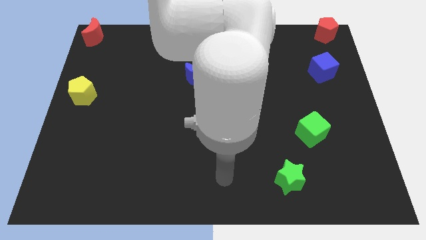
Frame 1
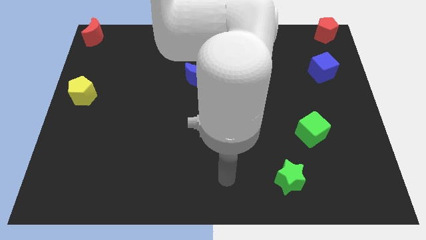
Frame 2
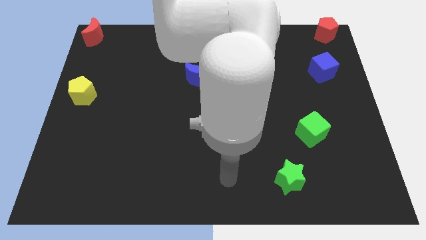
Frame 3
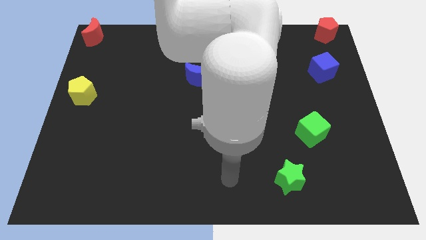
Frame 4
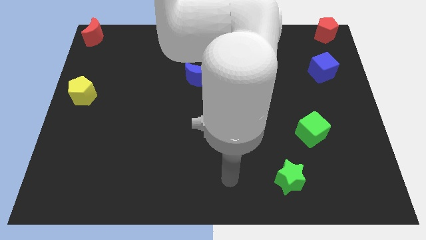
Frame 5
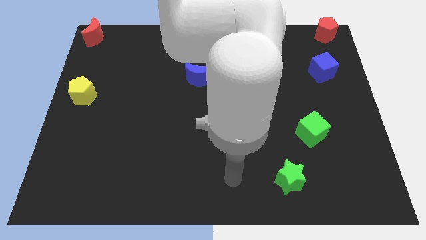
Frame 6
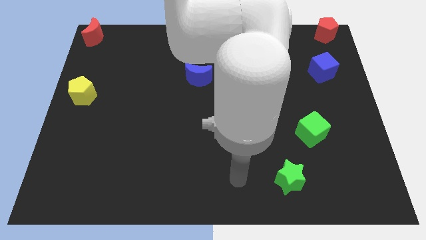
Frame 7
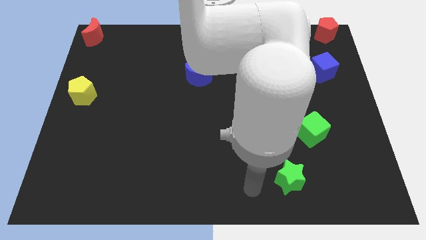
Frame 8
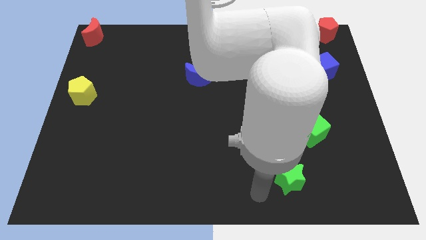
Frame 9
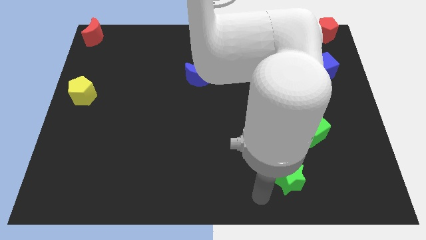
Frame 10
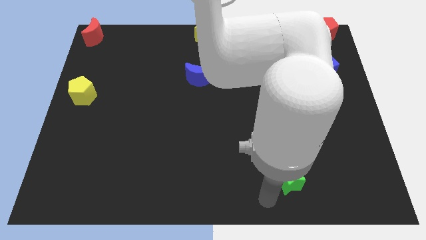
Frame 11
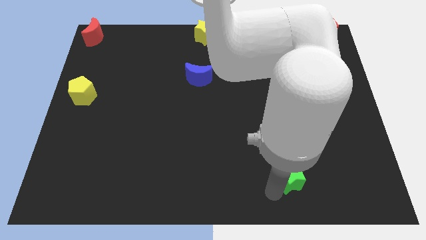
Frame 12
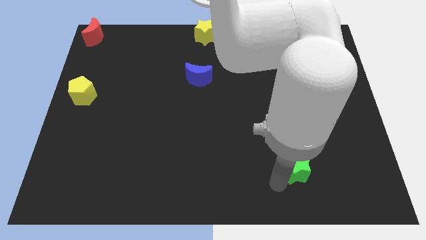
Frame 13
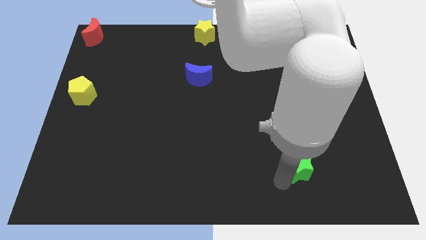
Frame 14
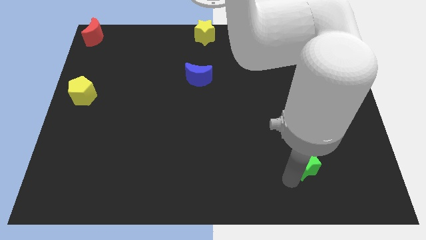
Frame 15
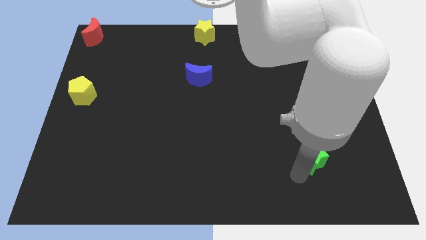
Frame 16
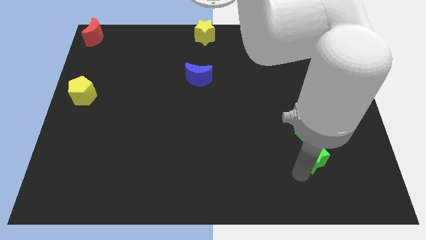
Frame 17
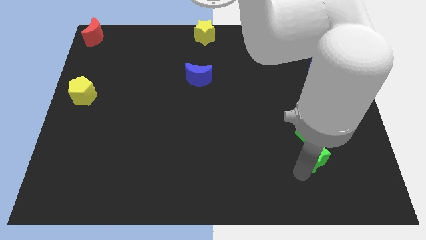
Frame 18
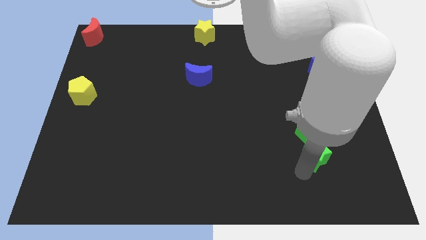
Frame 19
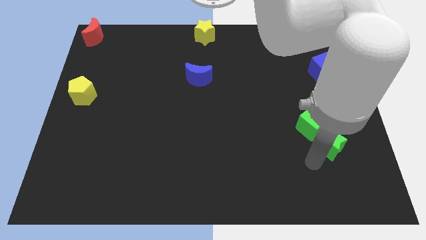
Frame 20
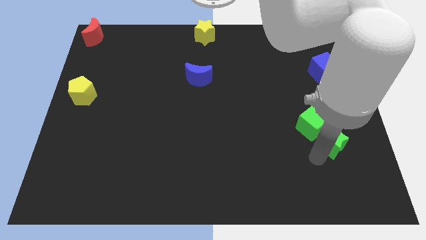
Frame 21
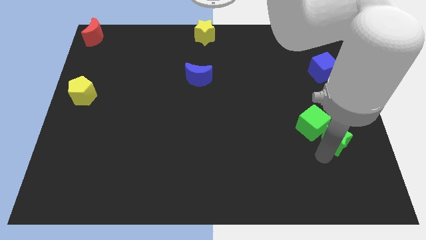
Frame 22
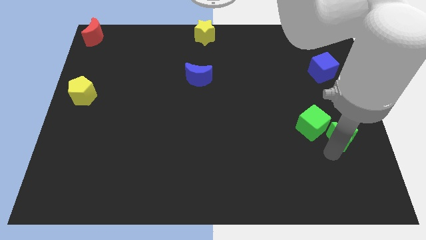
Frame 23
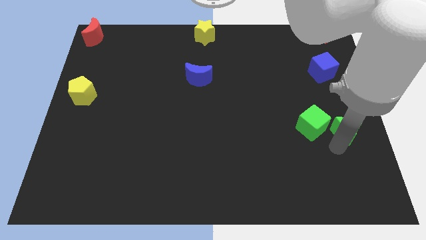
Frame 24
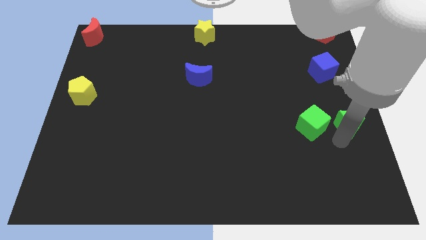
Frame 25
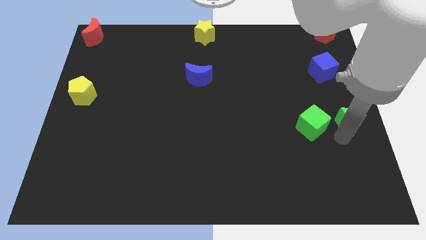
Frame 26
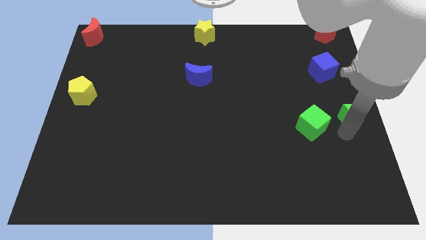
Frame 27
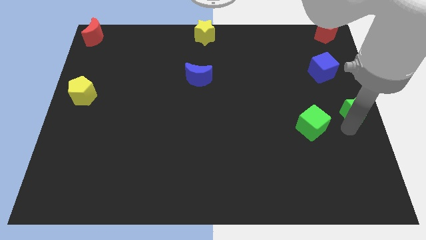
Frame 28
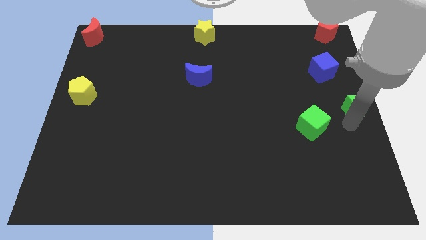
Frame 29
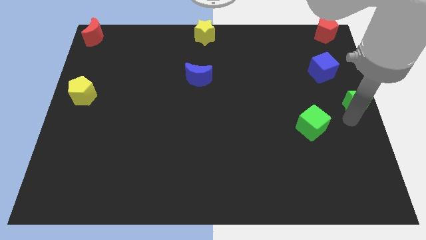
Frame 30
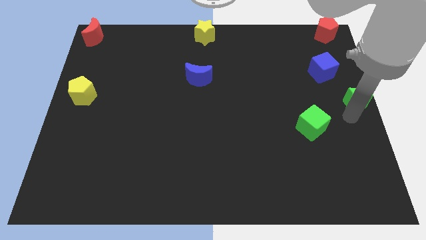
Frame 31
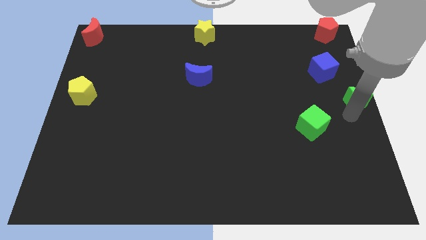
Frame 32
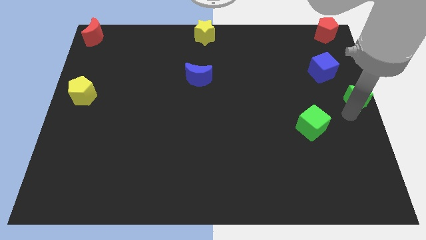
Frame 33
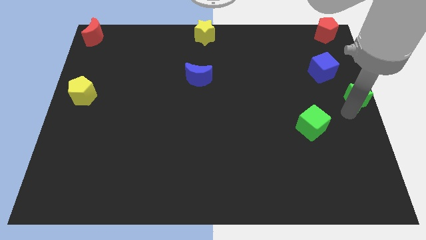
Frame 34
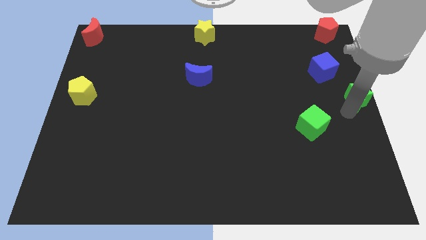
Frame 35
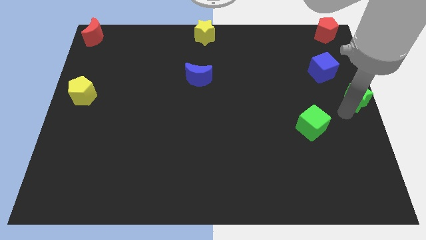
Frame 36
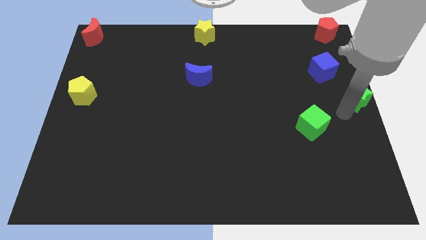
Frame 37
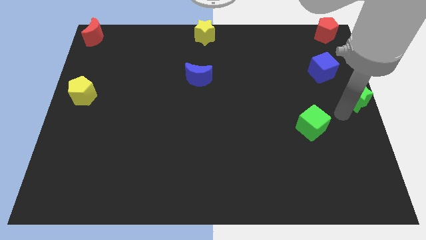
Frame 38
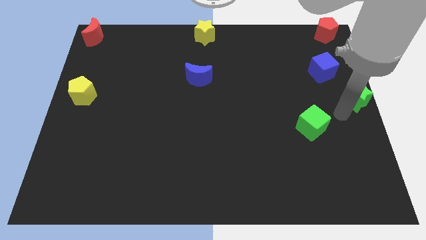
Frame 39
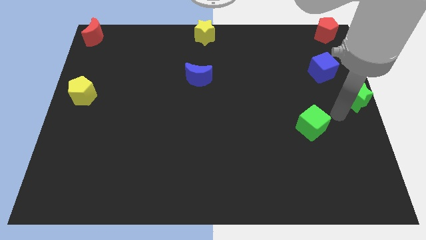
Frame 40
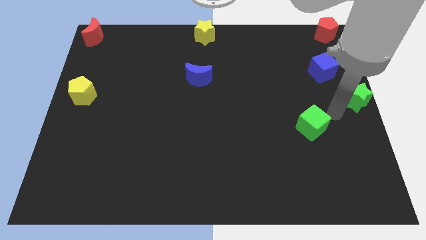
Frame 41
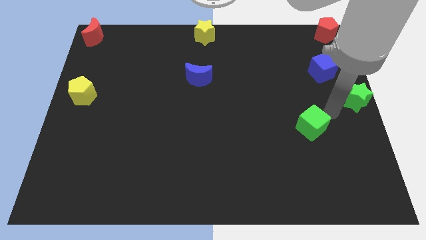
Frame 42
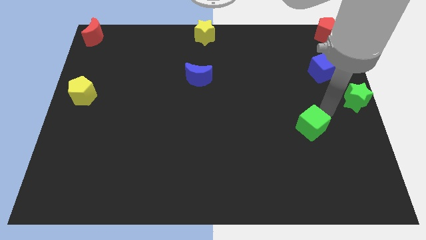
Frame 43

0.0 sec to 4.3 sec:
put the green star at the center right side of the board

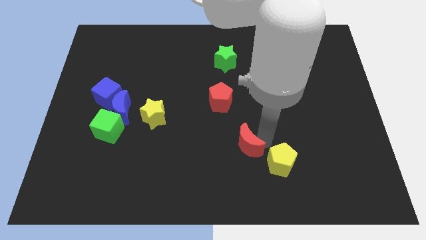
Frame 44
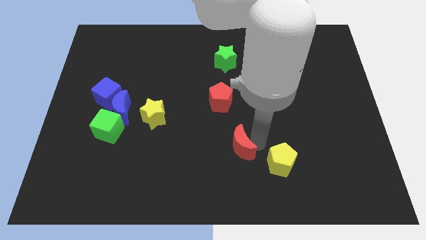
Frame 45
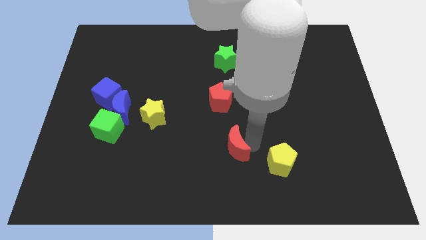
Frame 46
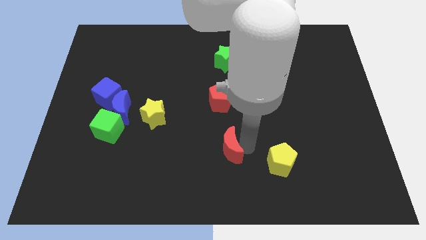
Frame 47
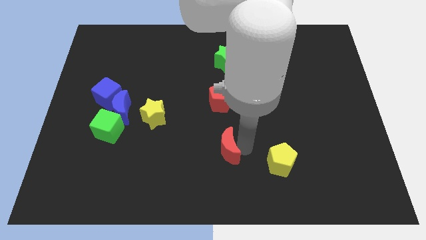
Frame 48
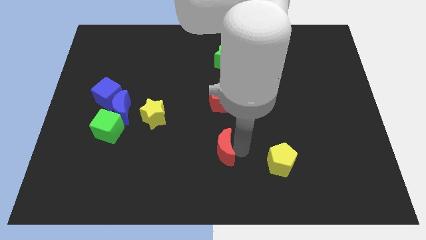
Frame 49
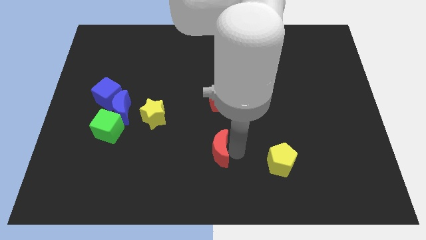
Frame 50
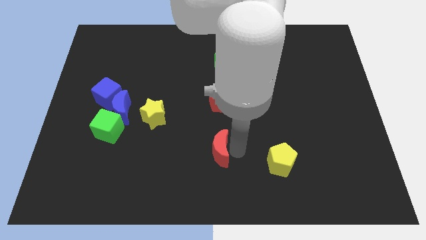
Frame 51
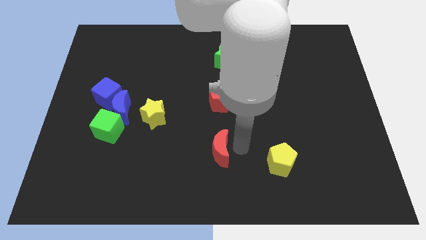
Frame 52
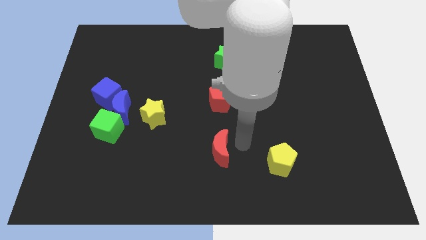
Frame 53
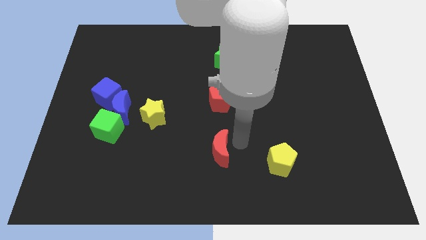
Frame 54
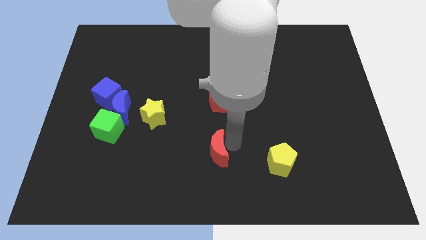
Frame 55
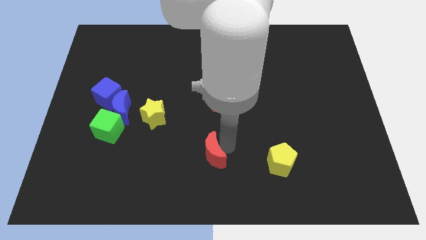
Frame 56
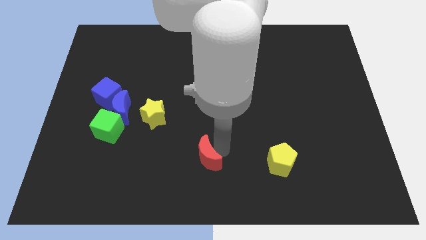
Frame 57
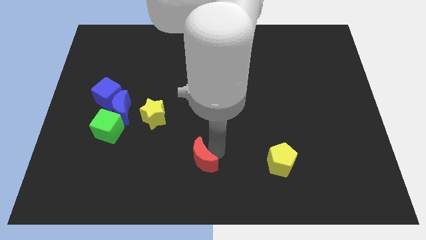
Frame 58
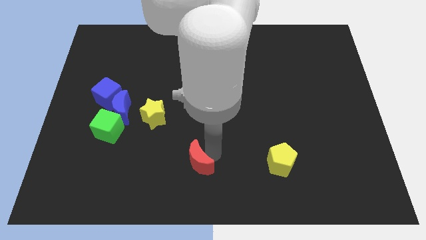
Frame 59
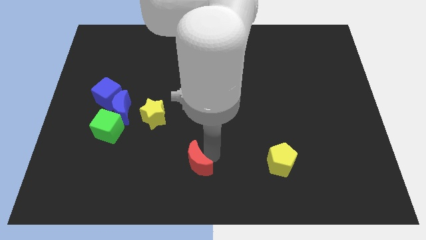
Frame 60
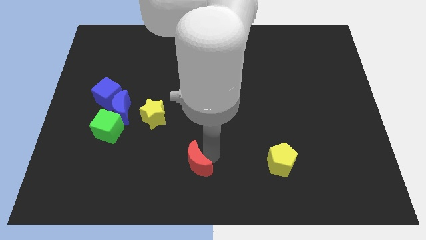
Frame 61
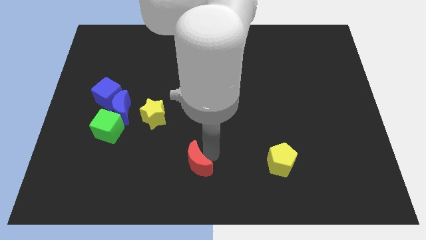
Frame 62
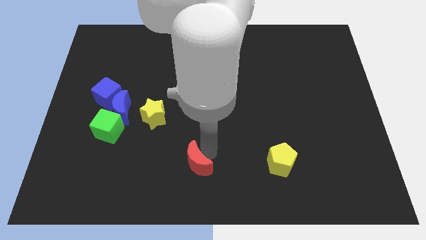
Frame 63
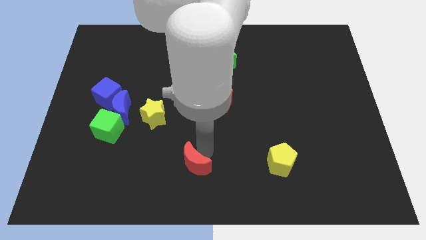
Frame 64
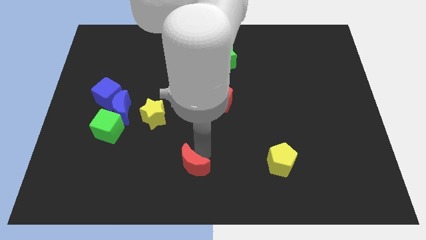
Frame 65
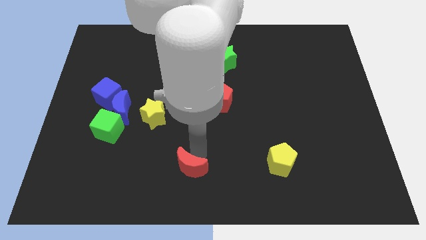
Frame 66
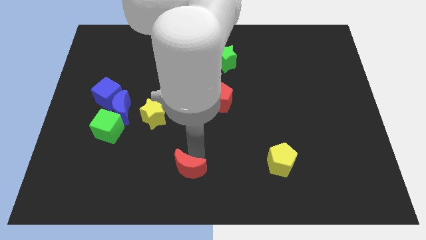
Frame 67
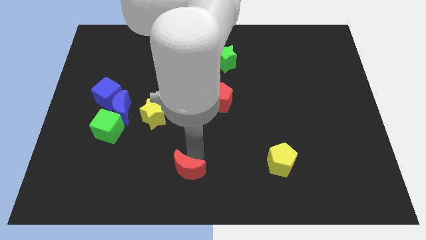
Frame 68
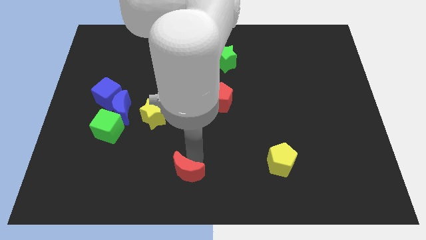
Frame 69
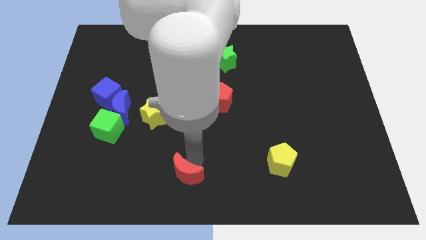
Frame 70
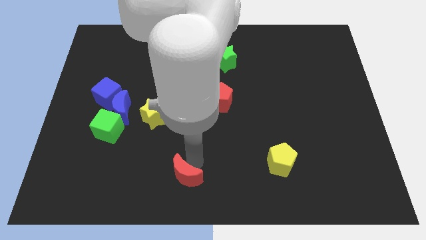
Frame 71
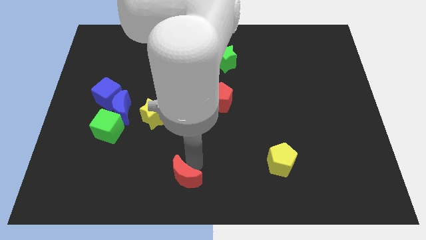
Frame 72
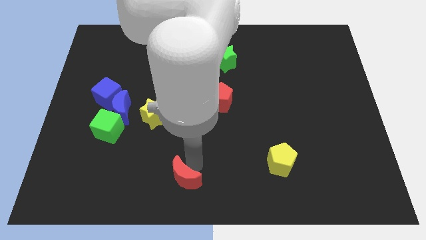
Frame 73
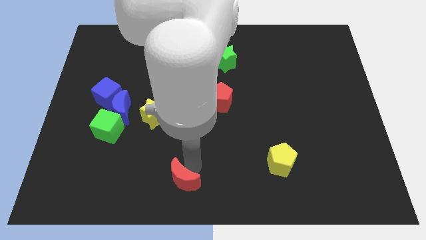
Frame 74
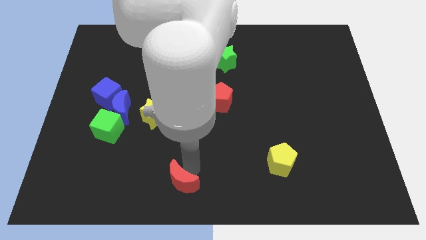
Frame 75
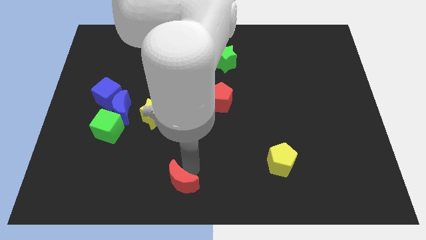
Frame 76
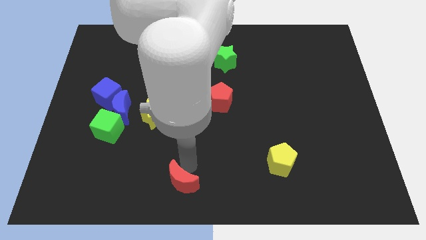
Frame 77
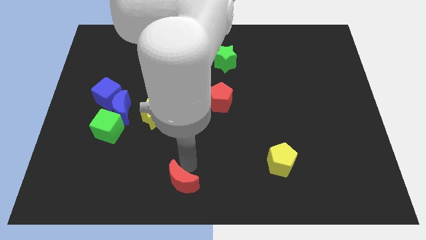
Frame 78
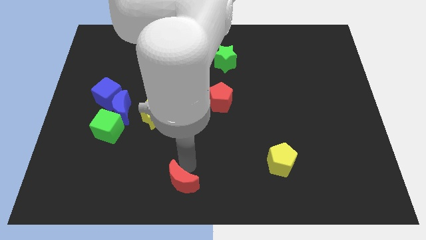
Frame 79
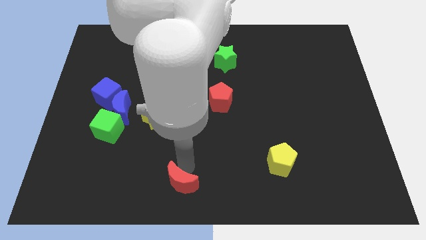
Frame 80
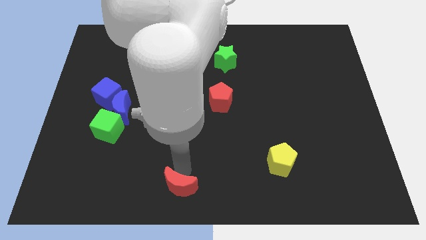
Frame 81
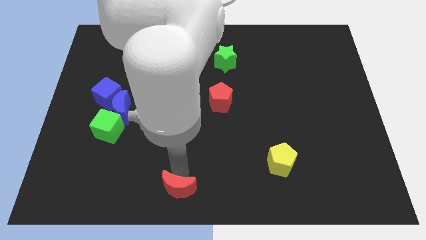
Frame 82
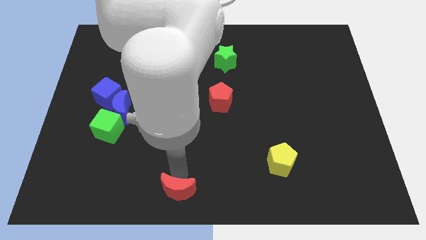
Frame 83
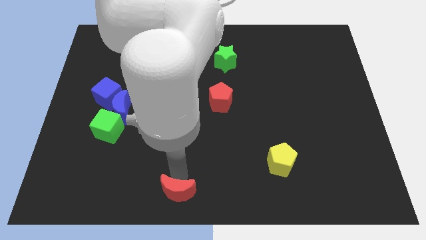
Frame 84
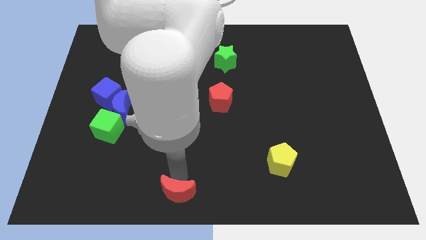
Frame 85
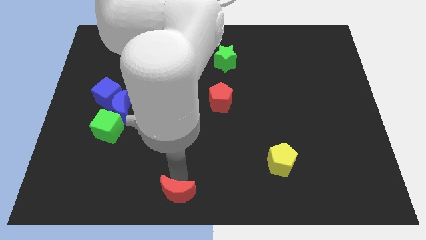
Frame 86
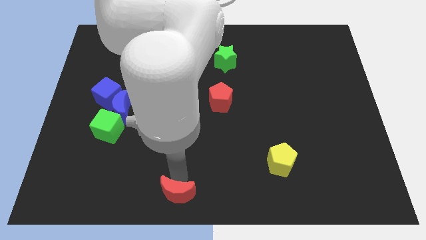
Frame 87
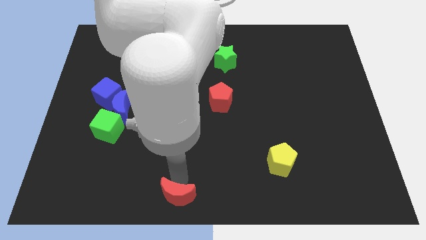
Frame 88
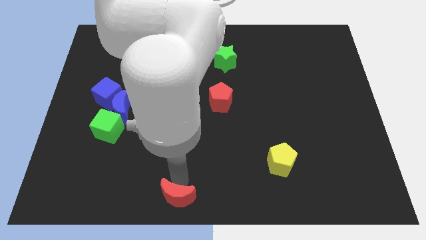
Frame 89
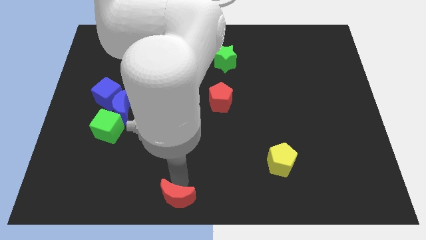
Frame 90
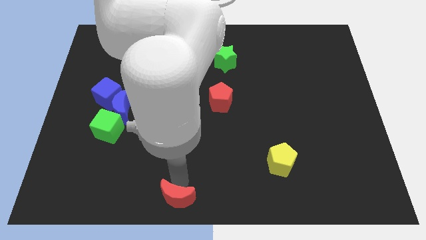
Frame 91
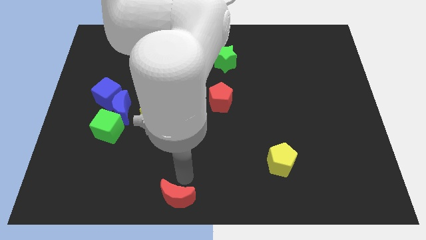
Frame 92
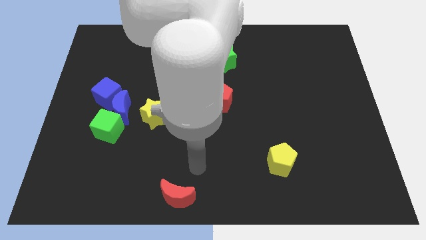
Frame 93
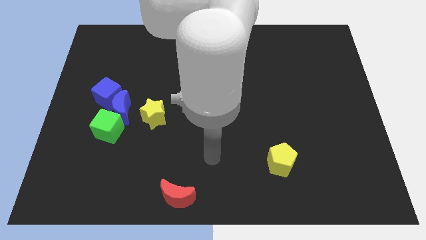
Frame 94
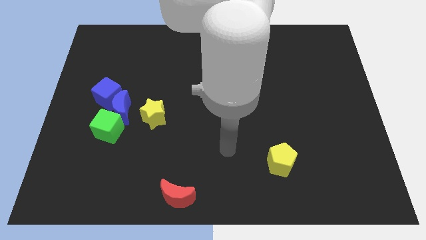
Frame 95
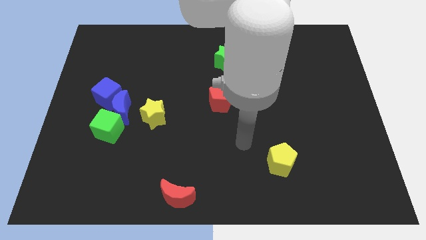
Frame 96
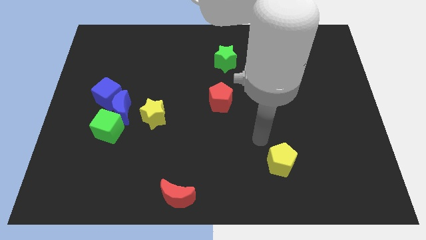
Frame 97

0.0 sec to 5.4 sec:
move the red crescent to the bottom center of the board
